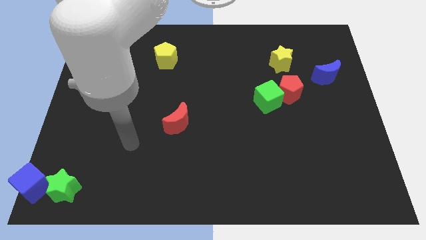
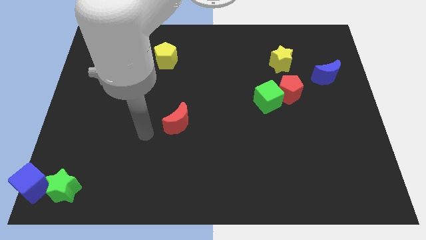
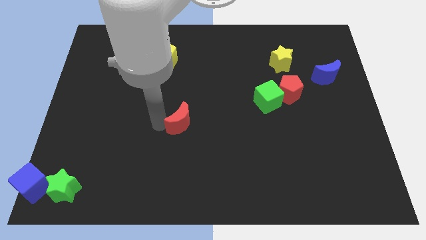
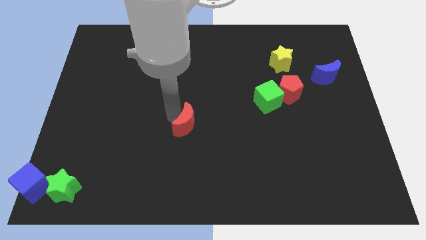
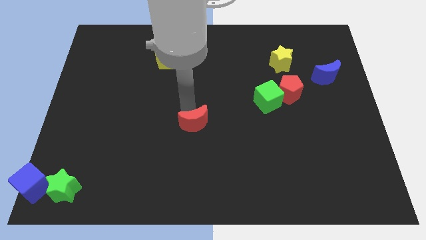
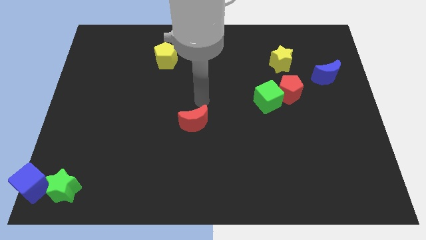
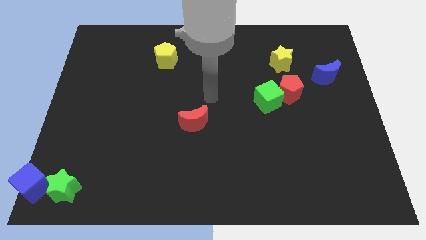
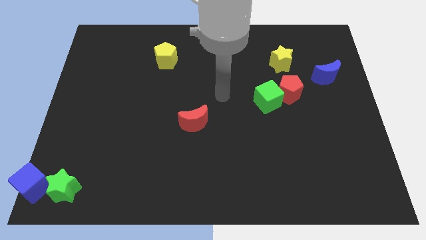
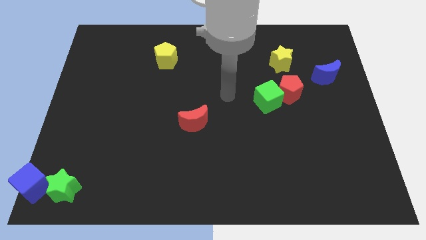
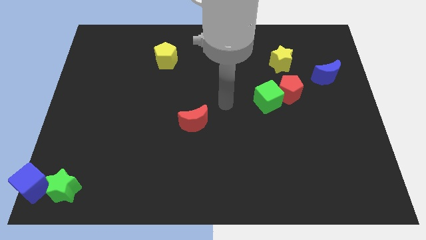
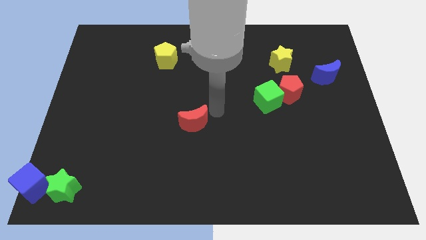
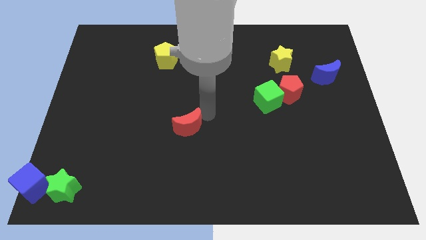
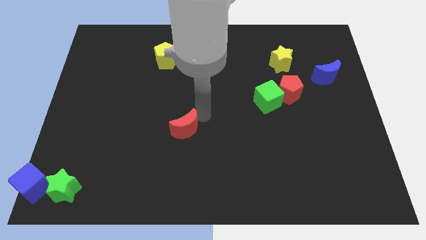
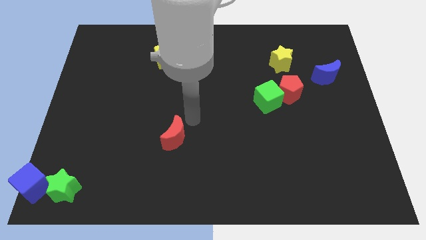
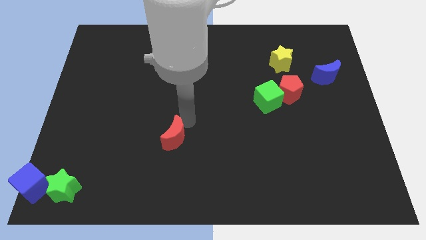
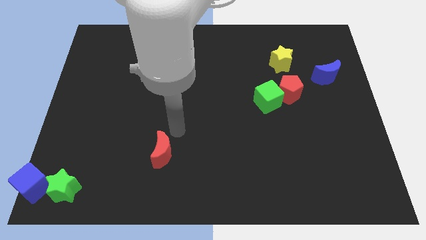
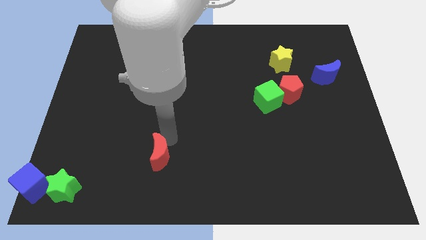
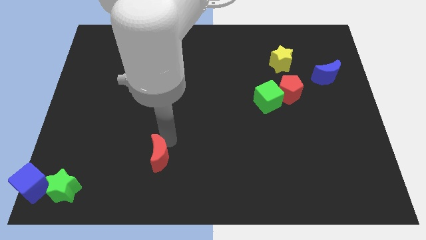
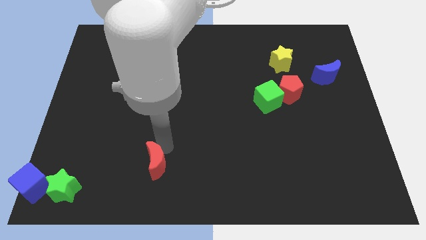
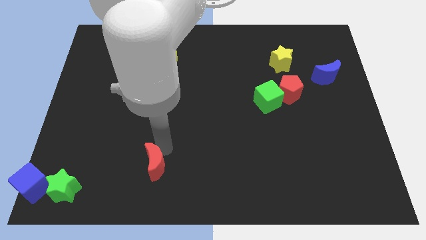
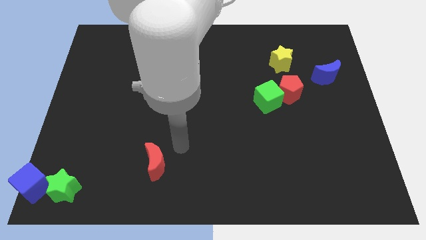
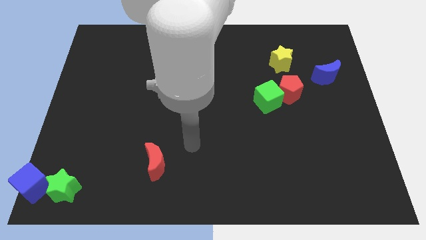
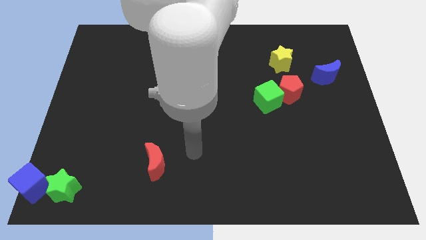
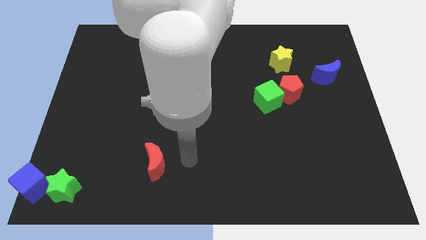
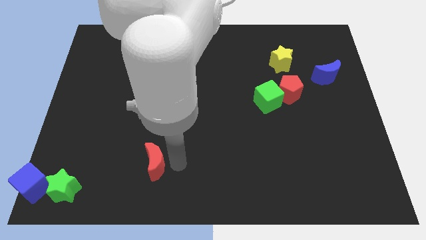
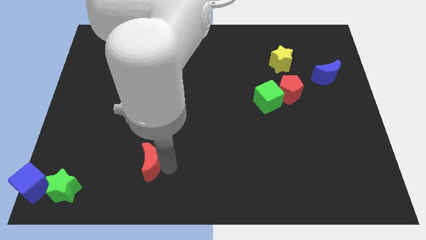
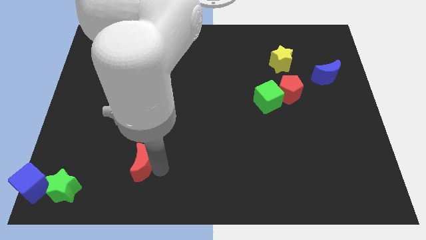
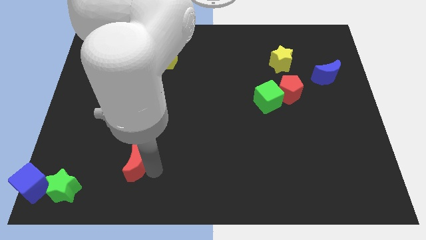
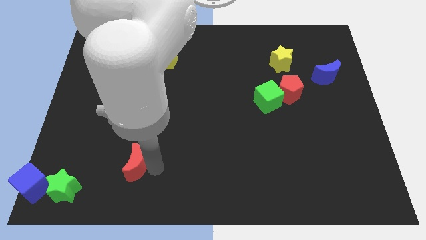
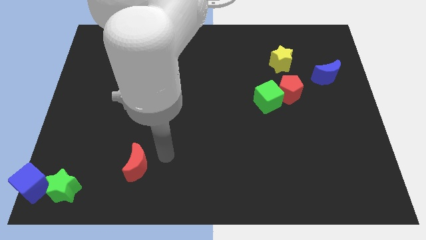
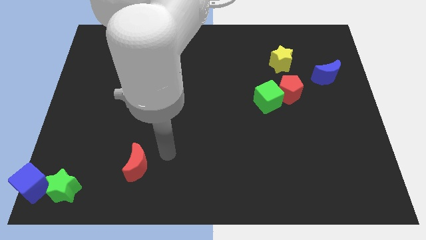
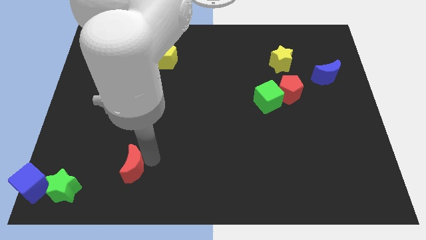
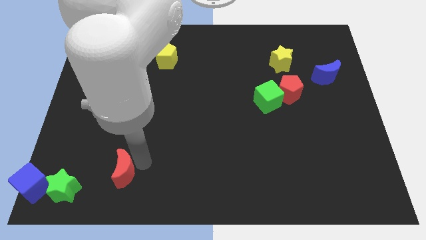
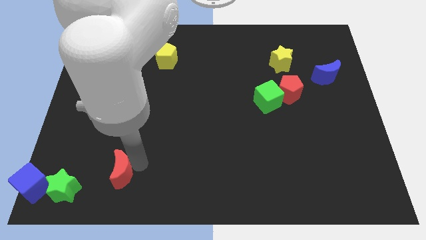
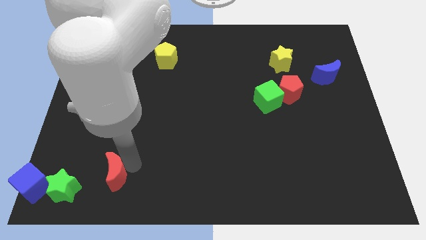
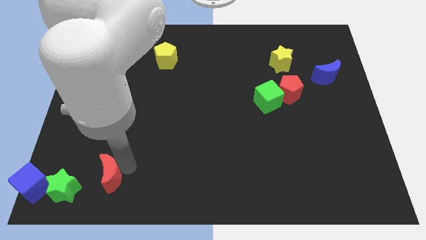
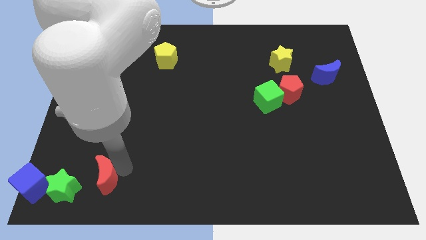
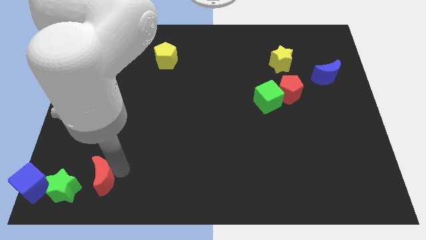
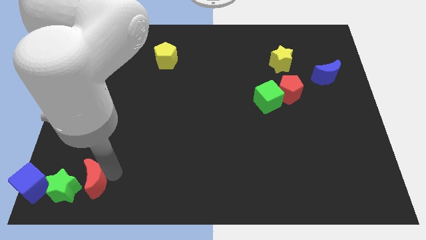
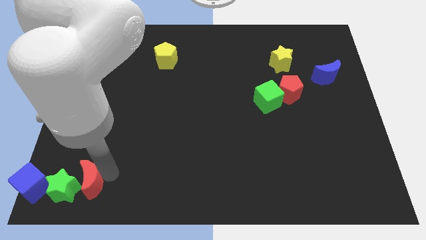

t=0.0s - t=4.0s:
place the red crescent in a horizontal line towards the right side of the green star

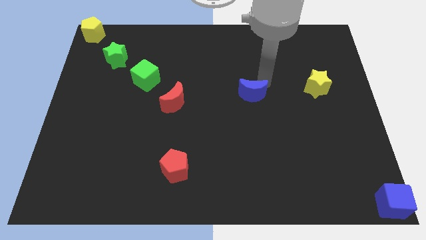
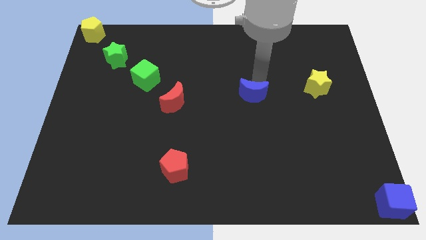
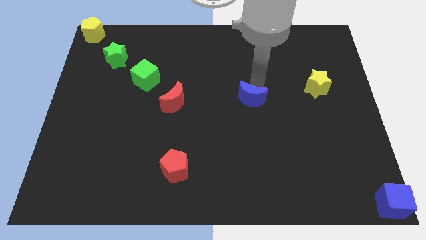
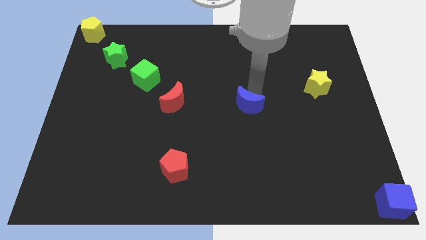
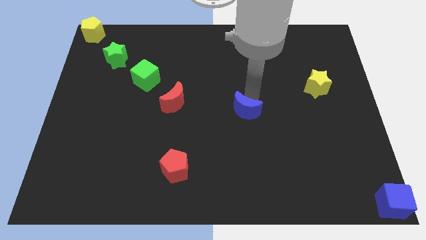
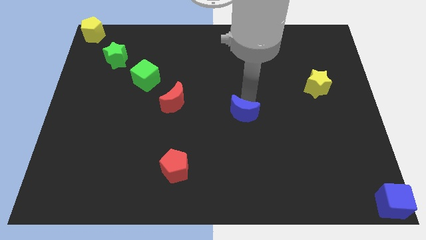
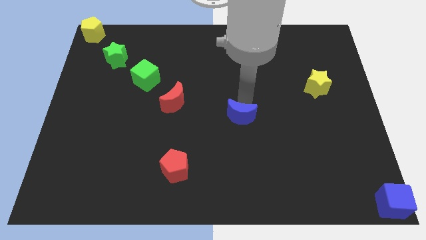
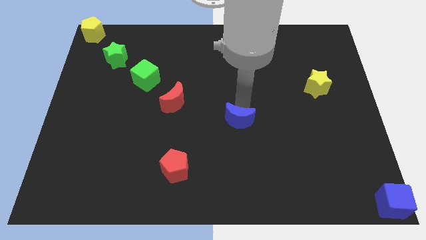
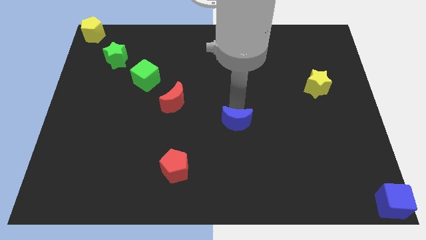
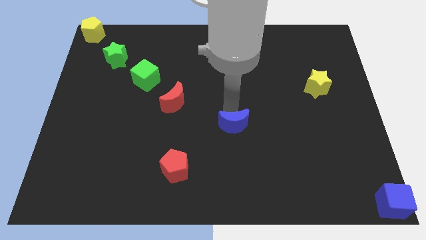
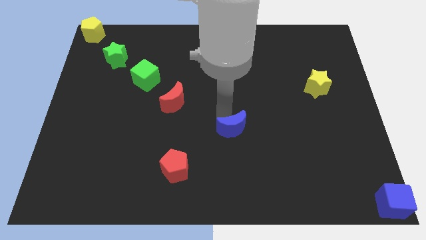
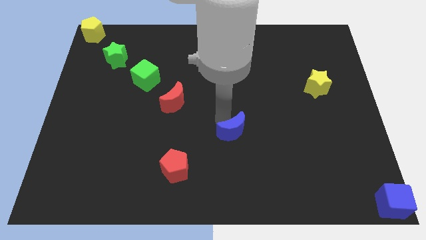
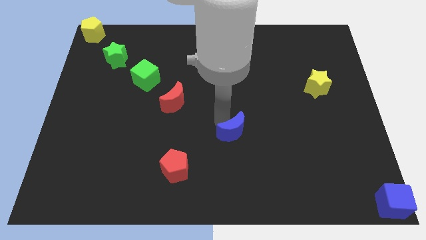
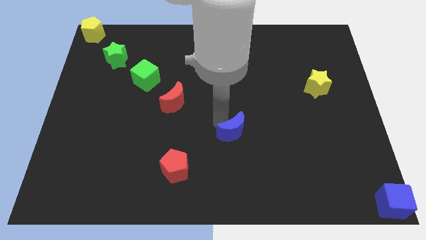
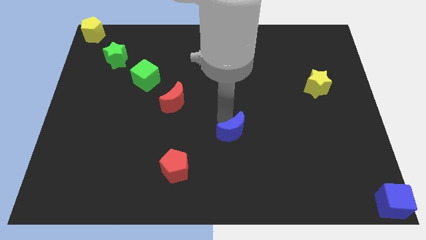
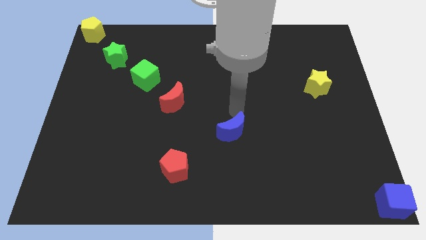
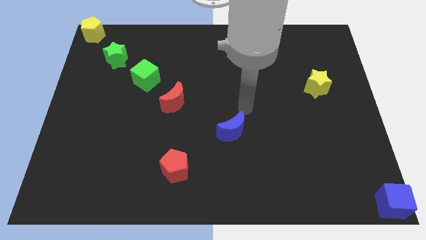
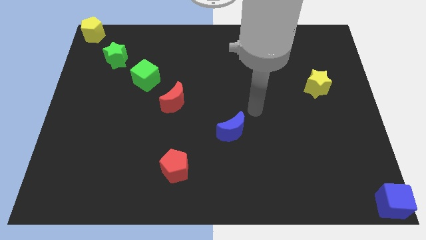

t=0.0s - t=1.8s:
move the blue moon and make a triangle with both the red blocks

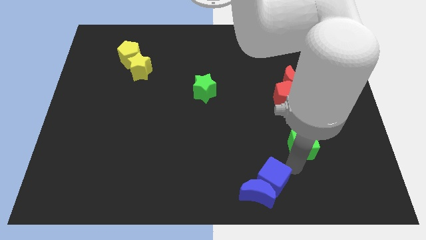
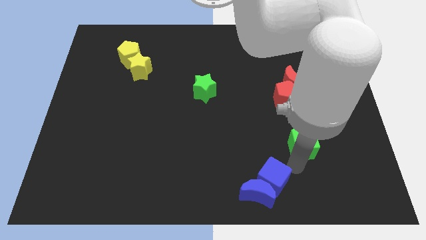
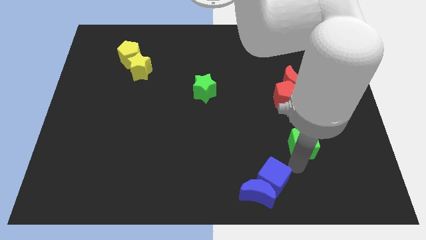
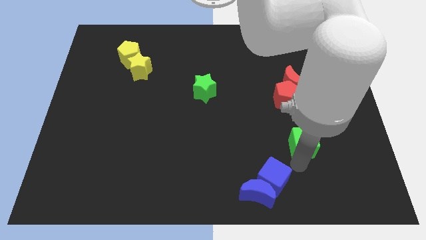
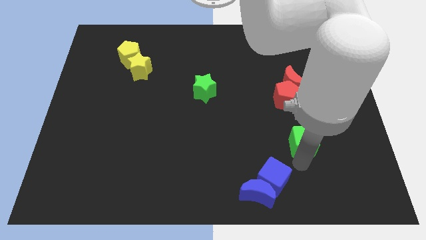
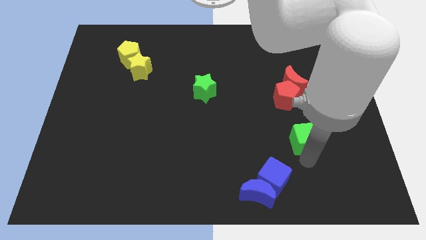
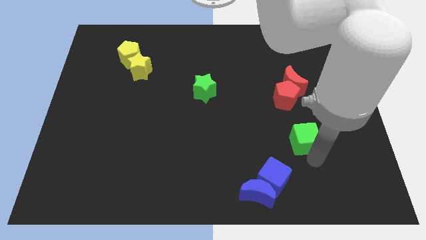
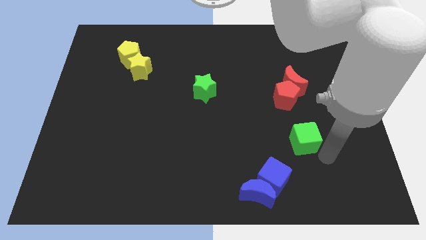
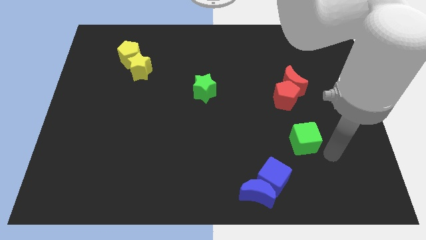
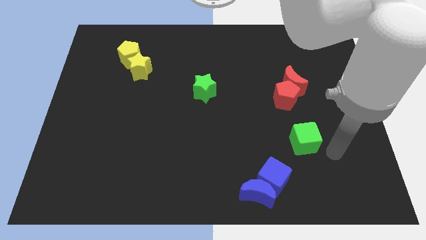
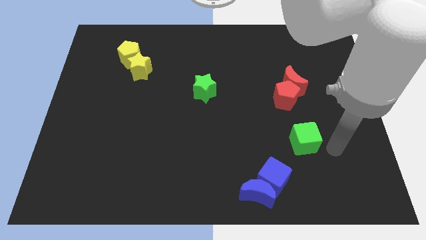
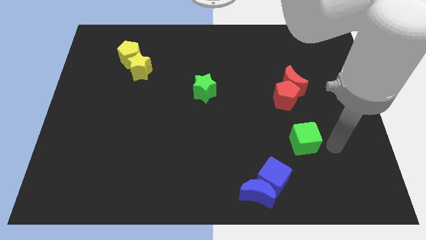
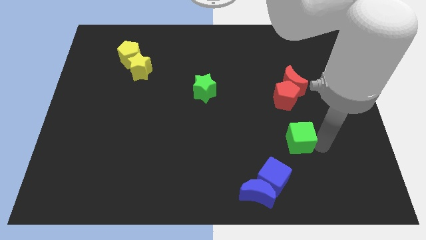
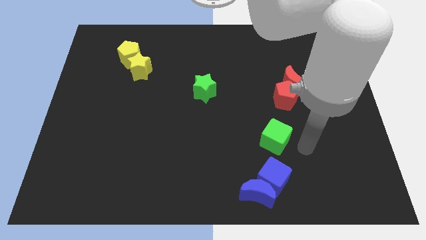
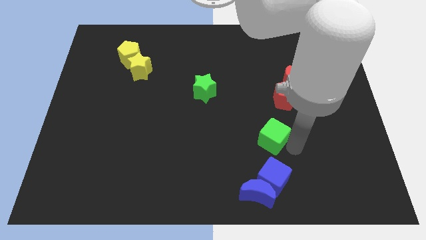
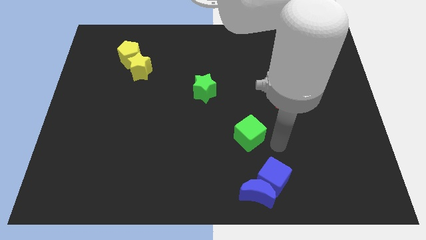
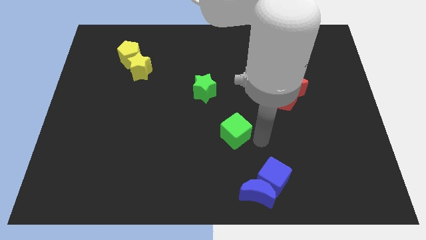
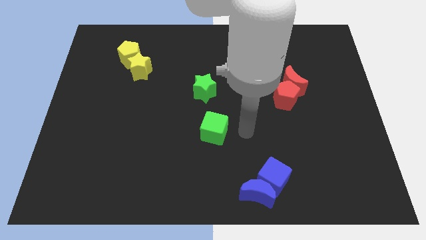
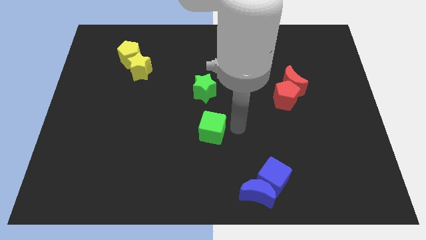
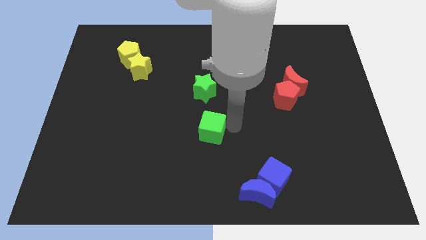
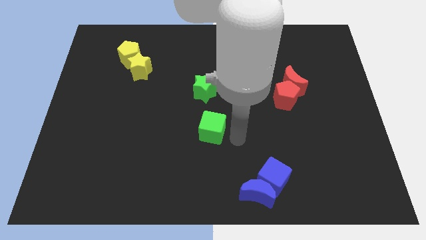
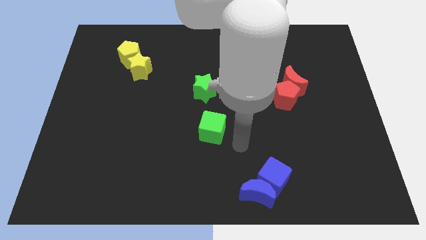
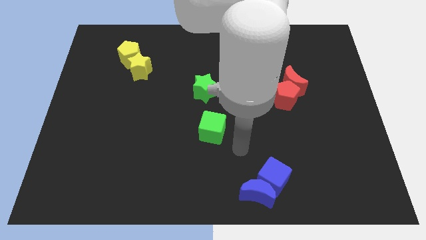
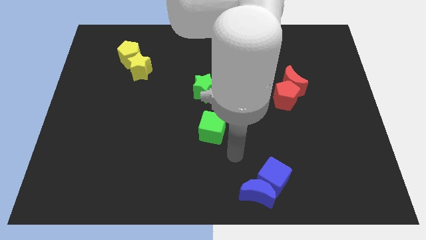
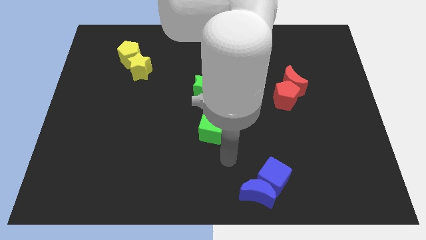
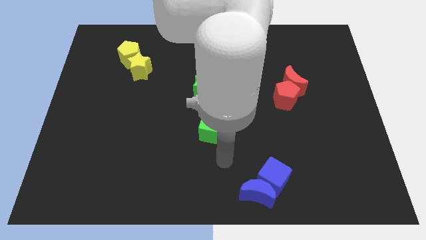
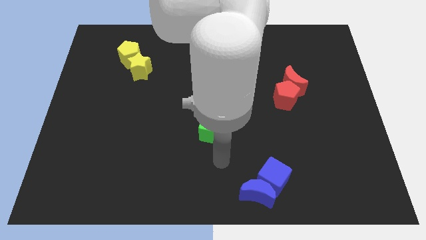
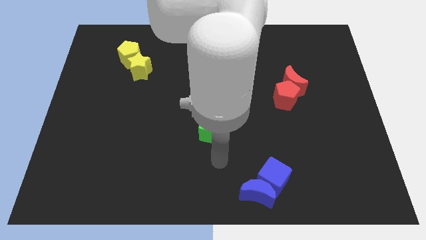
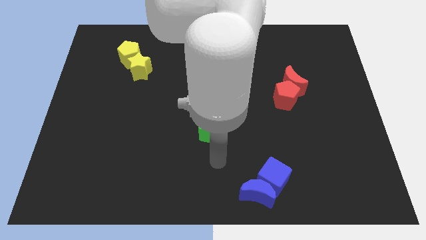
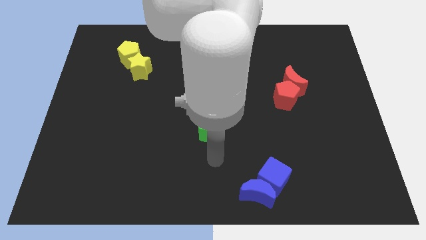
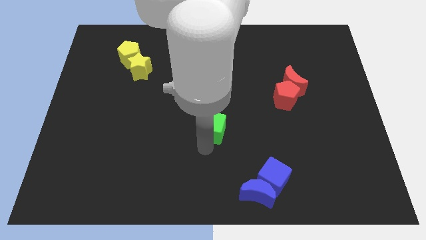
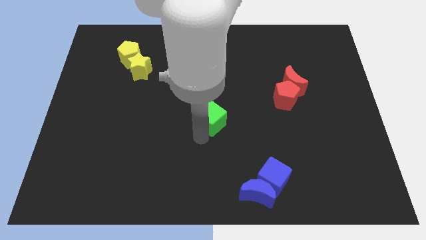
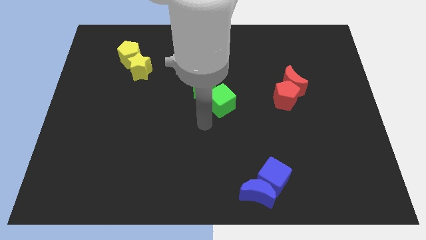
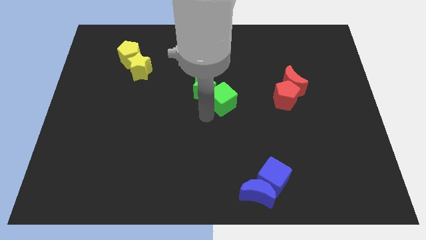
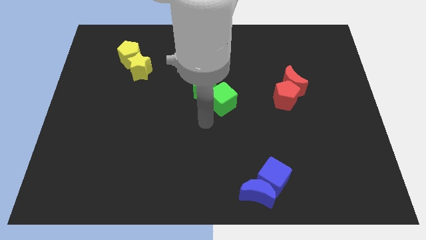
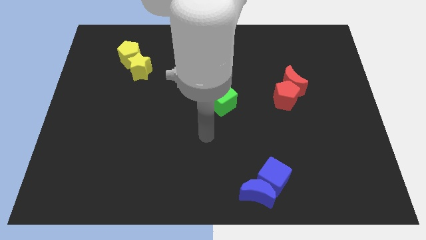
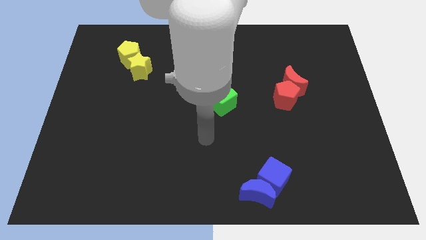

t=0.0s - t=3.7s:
push the green cube to the center of the board
